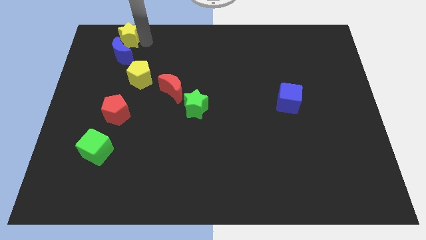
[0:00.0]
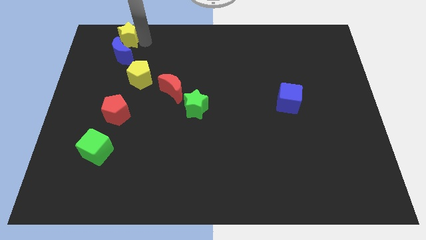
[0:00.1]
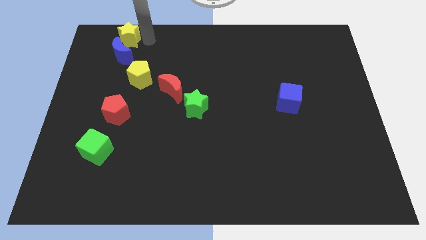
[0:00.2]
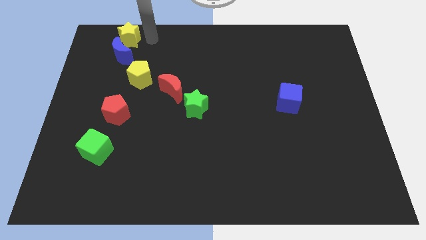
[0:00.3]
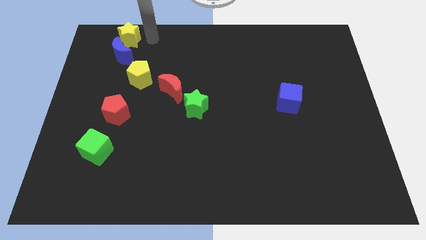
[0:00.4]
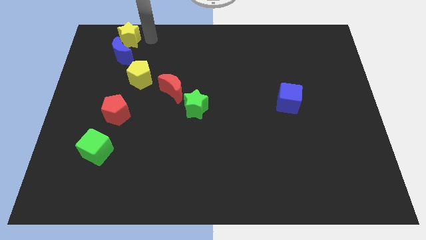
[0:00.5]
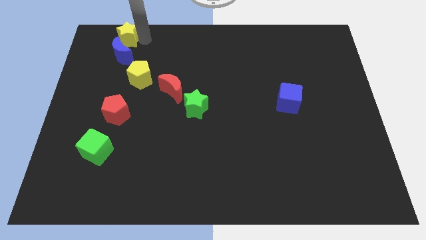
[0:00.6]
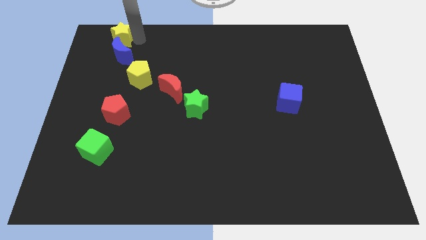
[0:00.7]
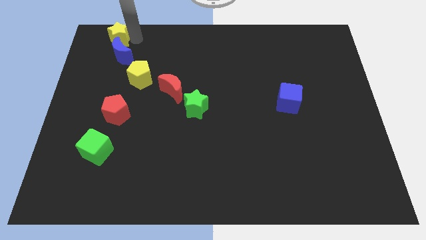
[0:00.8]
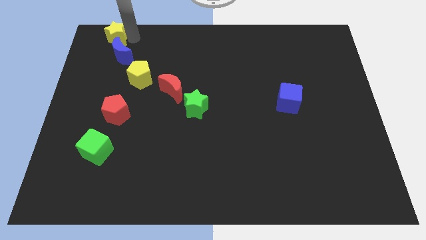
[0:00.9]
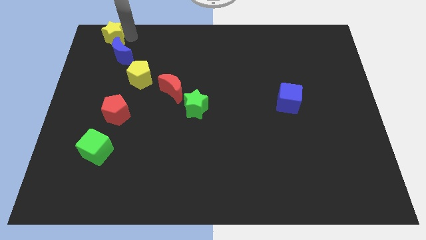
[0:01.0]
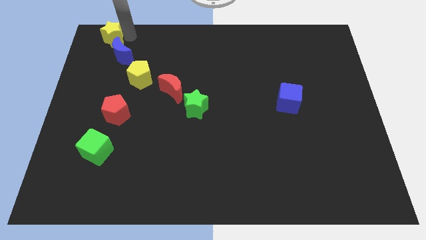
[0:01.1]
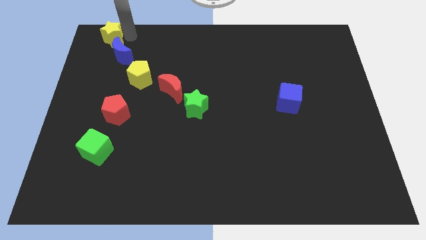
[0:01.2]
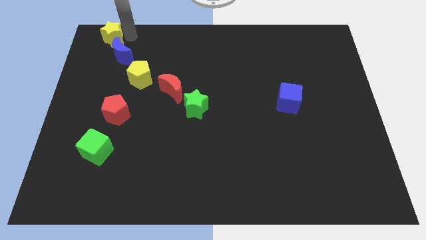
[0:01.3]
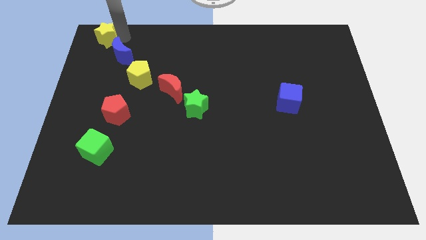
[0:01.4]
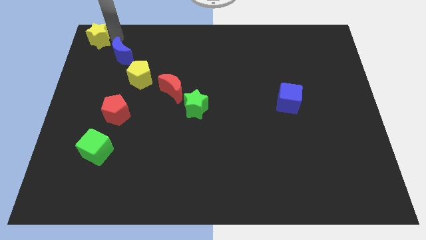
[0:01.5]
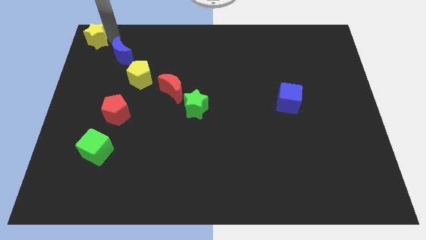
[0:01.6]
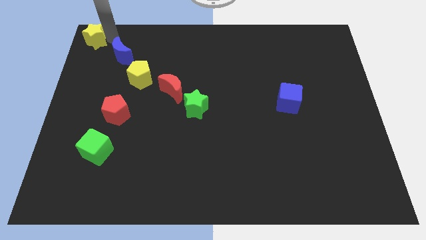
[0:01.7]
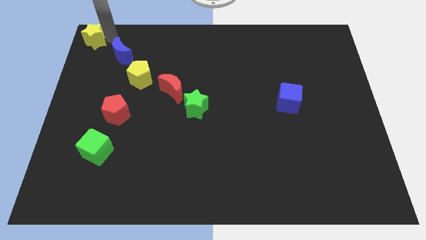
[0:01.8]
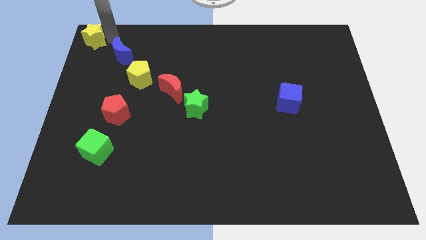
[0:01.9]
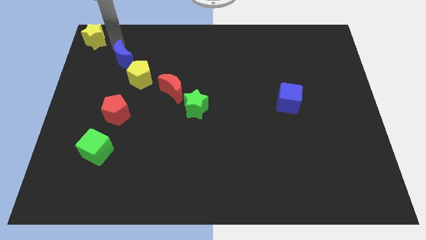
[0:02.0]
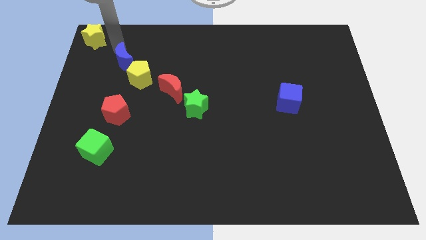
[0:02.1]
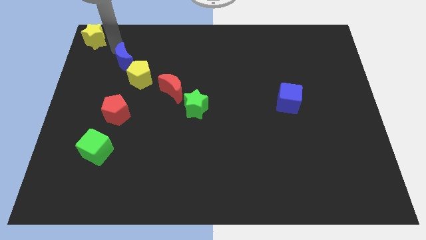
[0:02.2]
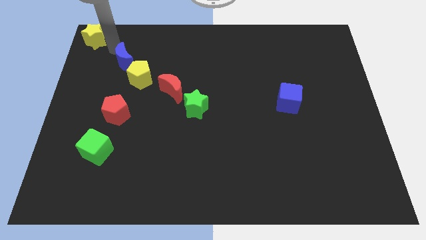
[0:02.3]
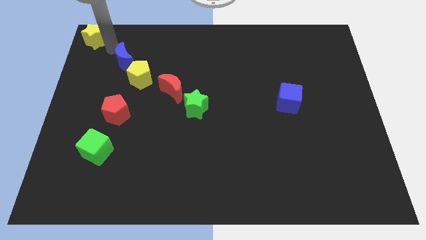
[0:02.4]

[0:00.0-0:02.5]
place the yellow star at the top left corner of the board

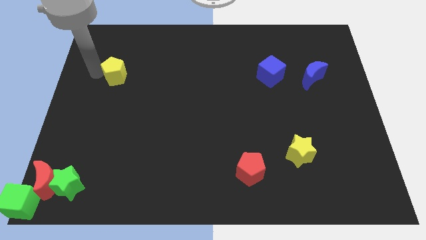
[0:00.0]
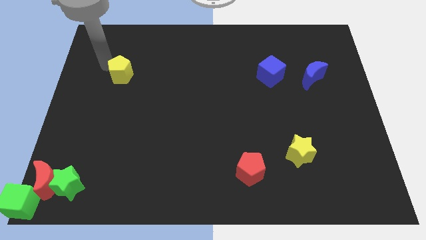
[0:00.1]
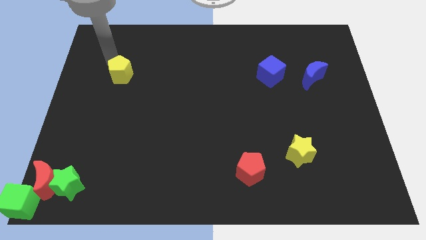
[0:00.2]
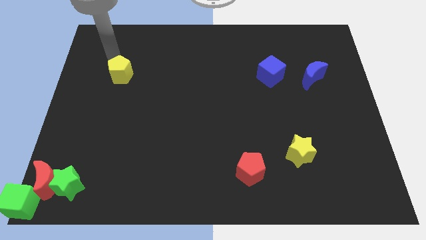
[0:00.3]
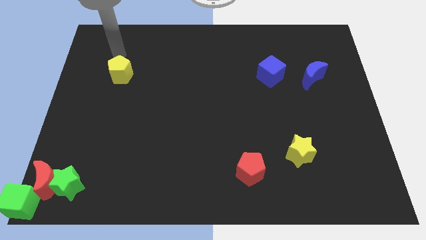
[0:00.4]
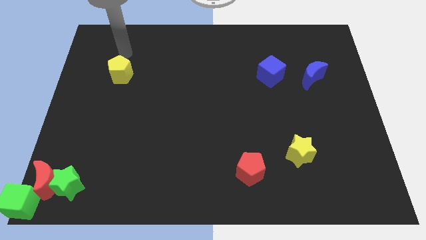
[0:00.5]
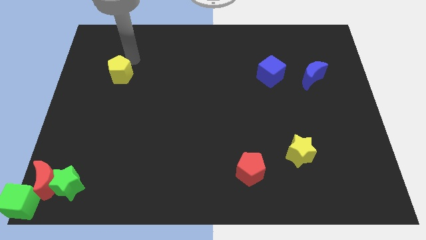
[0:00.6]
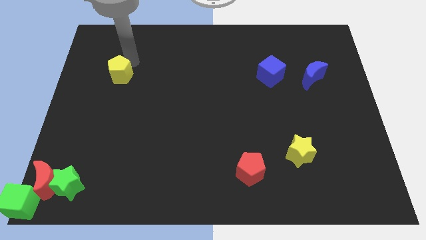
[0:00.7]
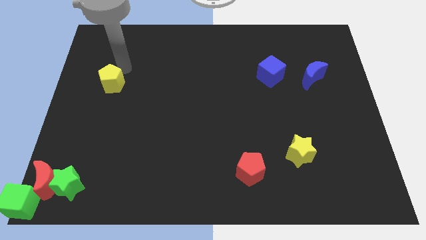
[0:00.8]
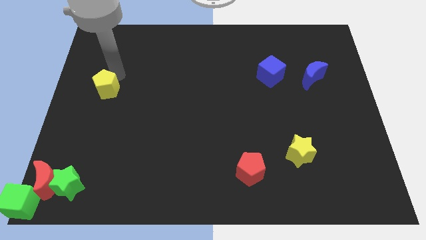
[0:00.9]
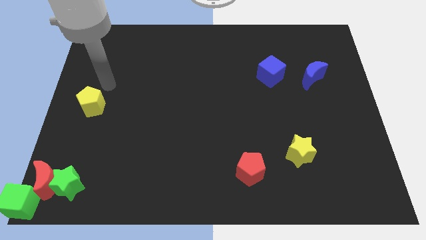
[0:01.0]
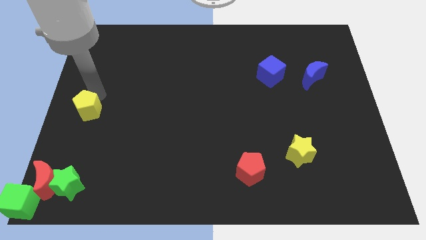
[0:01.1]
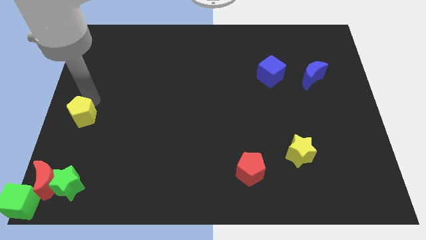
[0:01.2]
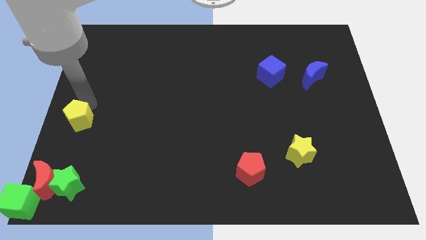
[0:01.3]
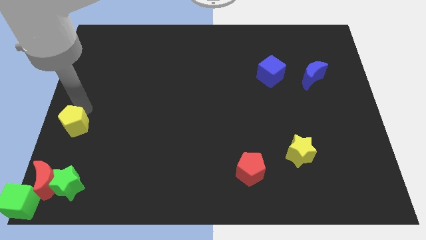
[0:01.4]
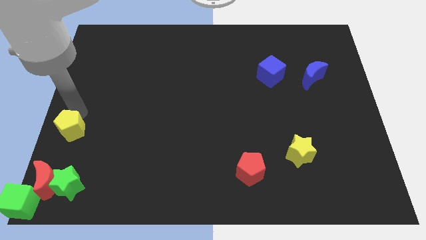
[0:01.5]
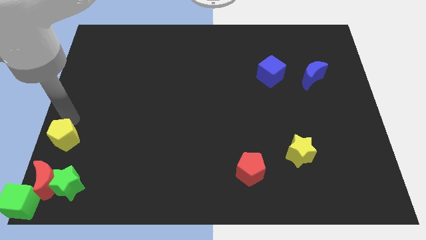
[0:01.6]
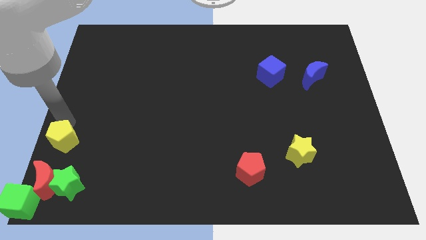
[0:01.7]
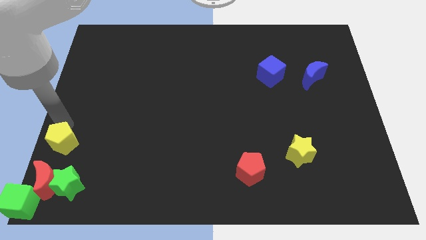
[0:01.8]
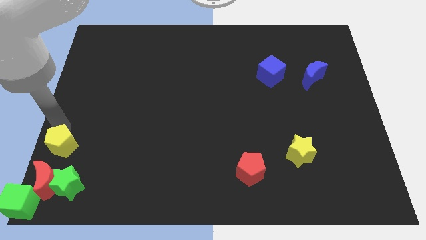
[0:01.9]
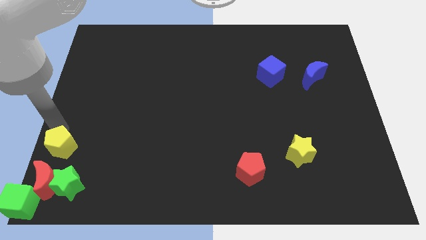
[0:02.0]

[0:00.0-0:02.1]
drag the yellow pentagon to the top side of the red moon and green star

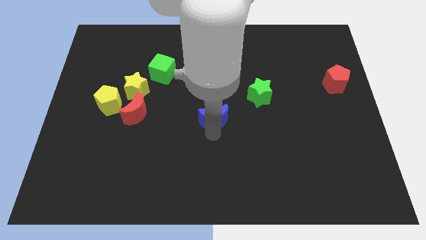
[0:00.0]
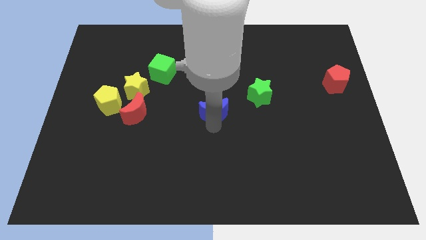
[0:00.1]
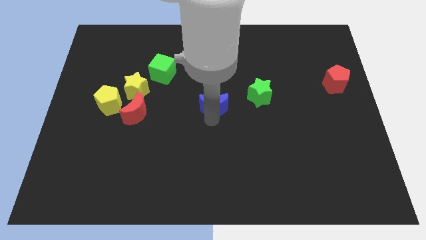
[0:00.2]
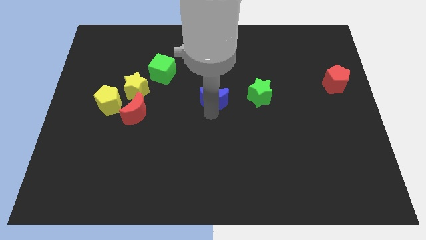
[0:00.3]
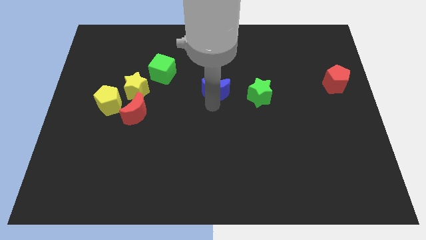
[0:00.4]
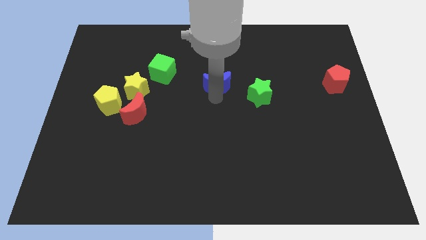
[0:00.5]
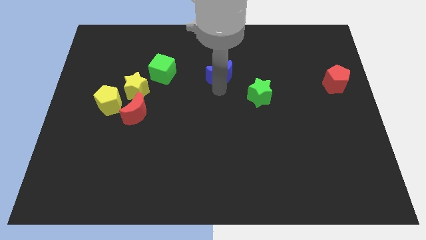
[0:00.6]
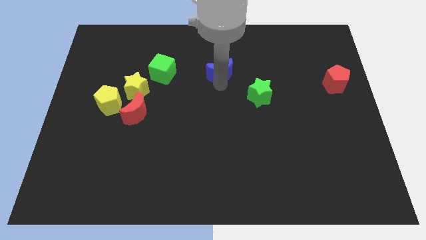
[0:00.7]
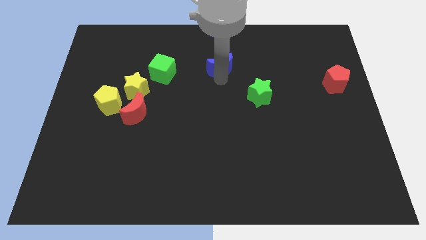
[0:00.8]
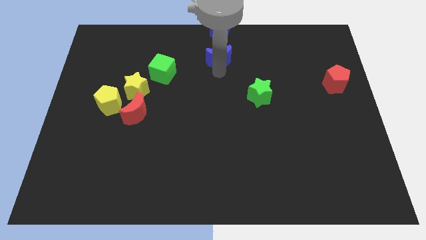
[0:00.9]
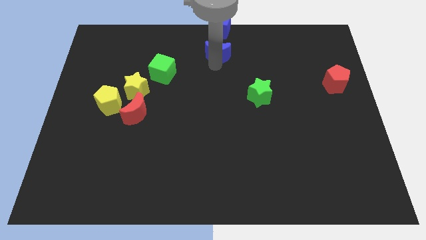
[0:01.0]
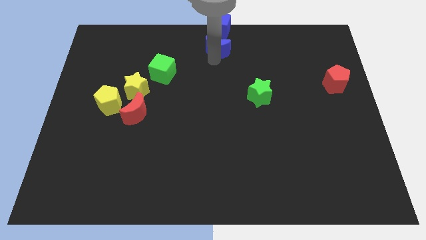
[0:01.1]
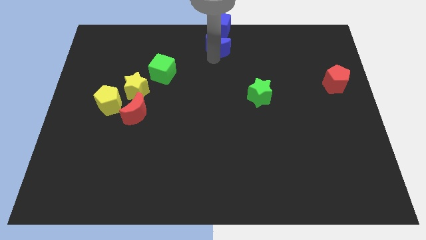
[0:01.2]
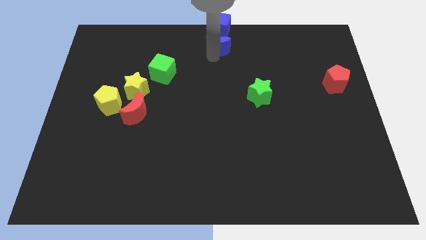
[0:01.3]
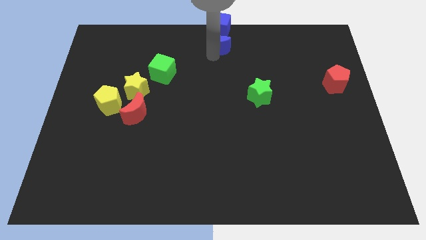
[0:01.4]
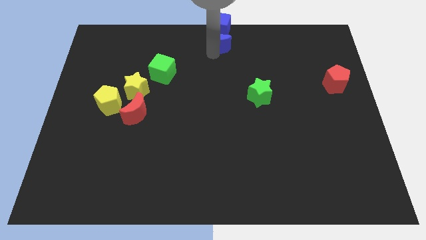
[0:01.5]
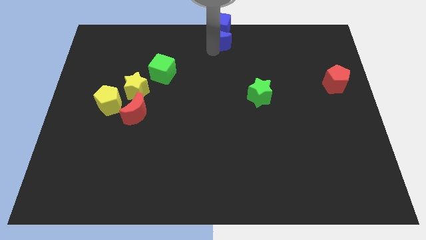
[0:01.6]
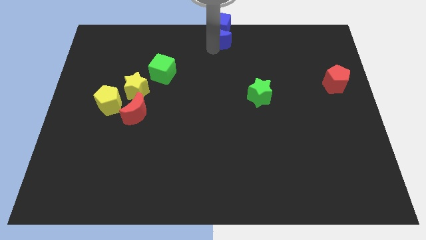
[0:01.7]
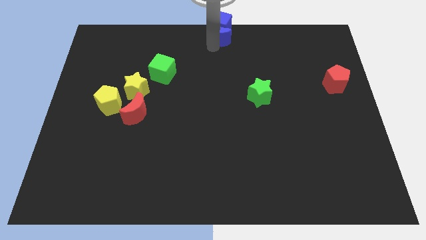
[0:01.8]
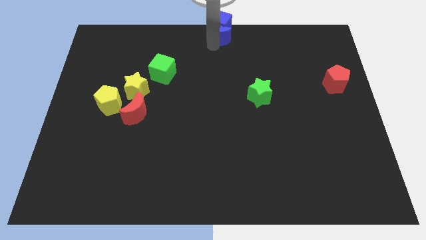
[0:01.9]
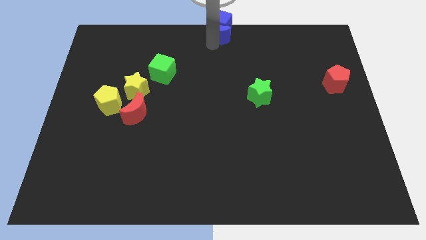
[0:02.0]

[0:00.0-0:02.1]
push the blue crescent into blue cube

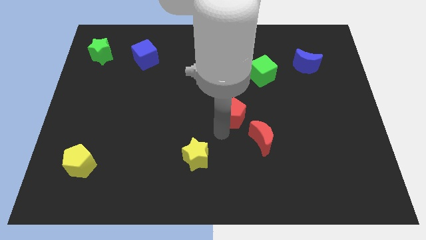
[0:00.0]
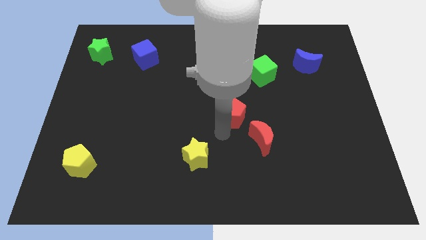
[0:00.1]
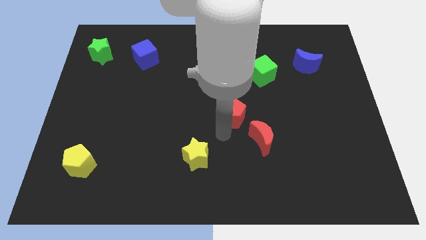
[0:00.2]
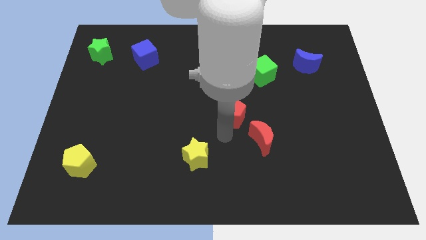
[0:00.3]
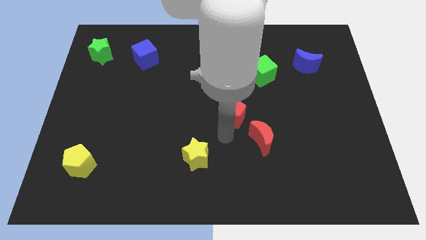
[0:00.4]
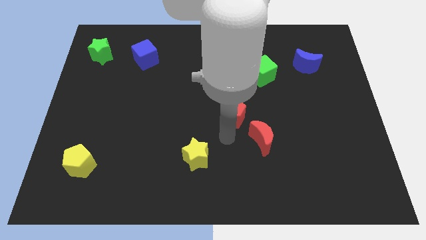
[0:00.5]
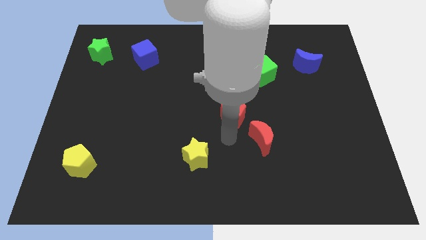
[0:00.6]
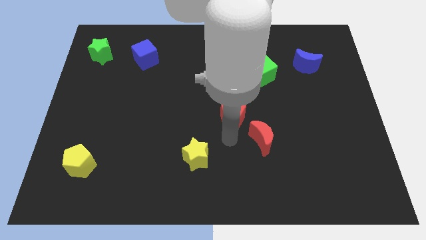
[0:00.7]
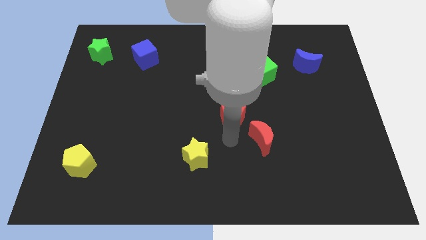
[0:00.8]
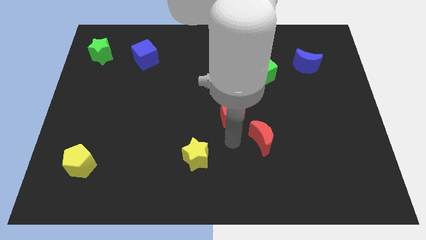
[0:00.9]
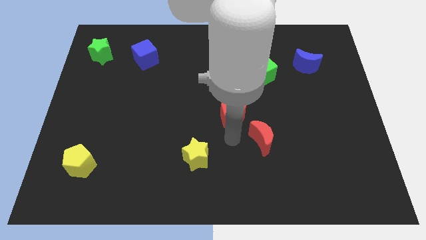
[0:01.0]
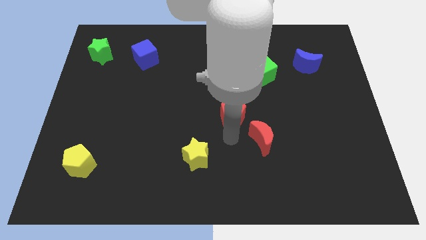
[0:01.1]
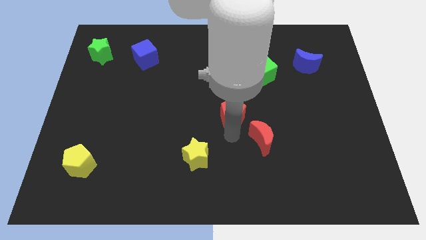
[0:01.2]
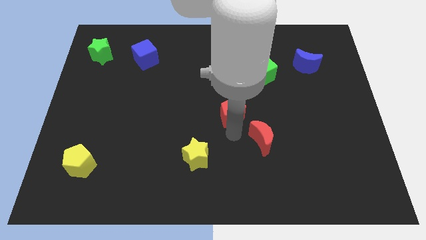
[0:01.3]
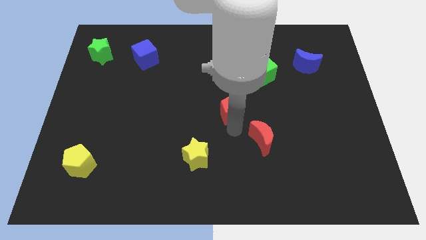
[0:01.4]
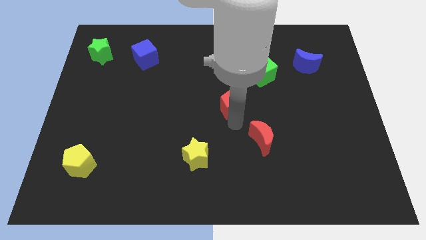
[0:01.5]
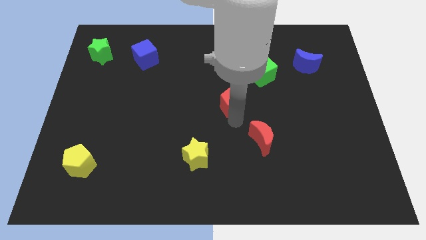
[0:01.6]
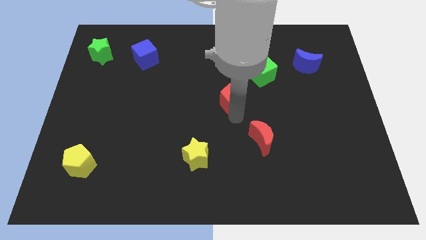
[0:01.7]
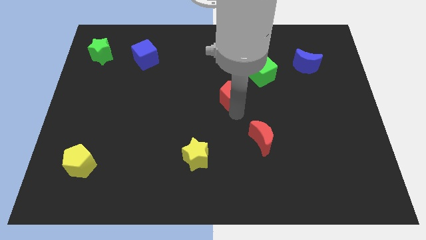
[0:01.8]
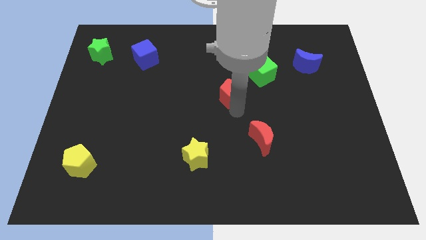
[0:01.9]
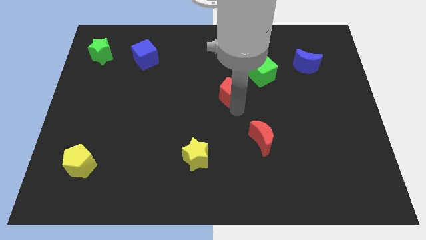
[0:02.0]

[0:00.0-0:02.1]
separate the red pentagon from red crescent
